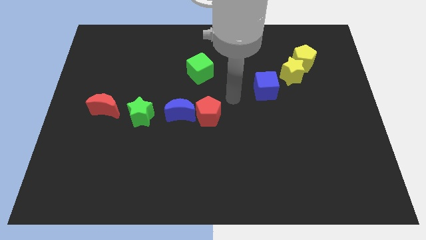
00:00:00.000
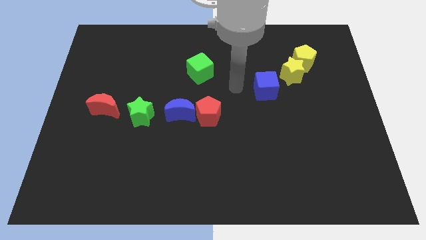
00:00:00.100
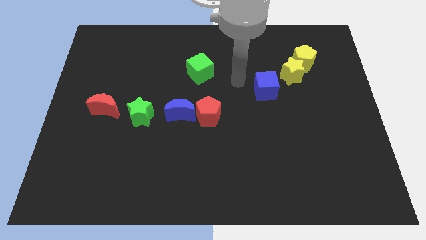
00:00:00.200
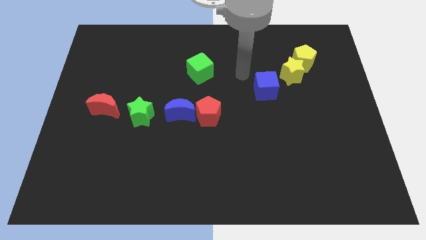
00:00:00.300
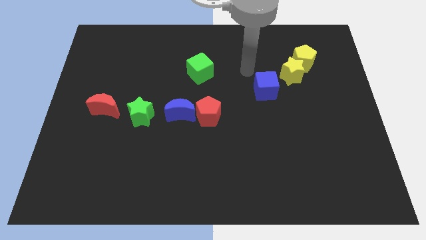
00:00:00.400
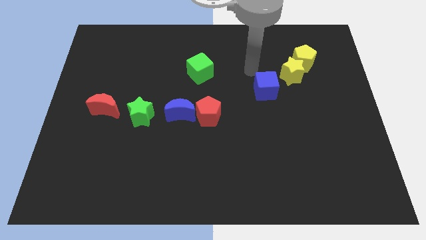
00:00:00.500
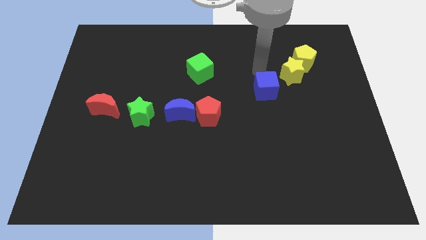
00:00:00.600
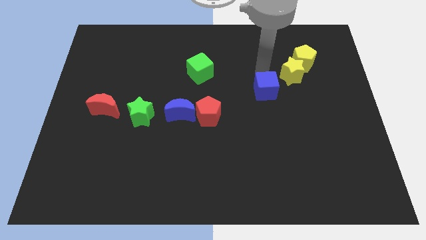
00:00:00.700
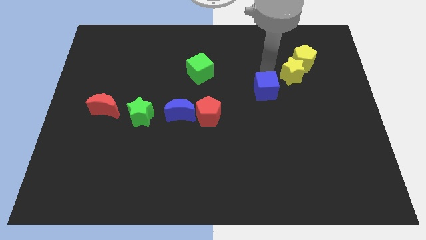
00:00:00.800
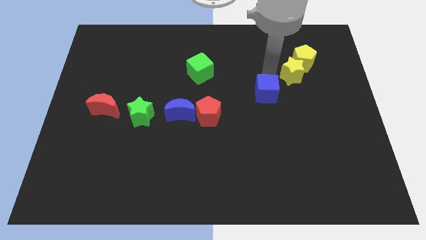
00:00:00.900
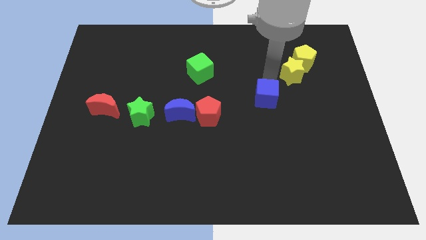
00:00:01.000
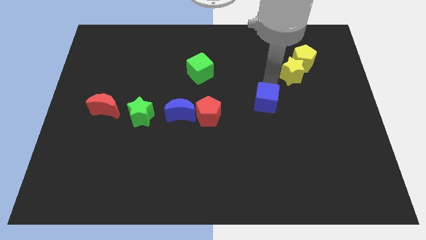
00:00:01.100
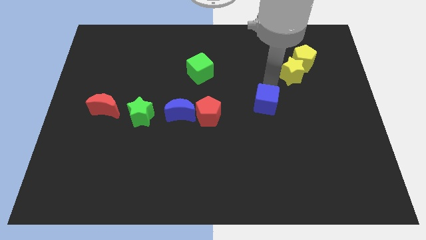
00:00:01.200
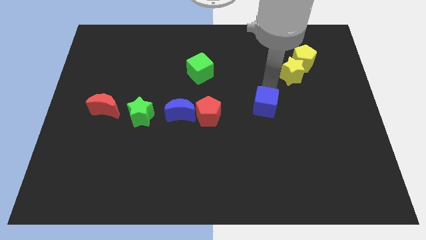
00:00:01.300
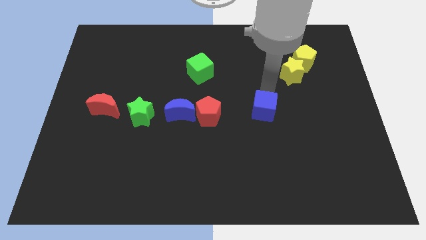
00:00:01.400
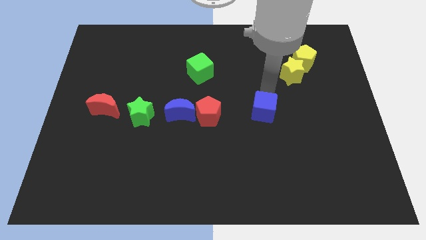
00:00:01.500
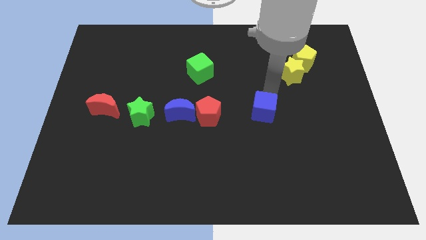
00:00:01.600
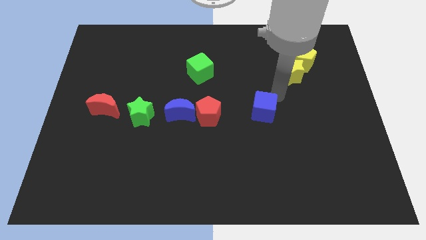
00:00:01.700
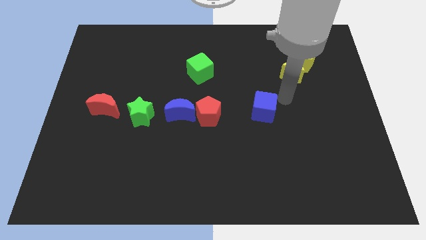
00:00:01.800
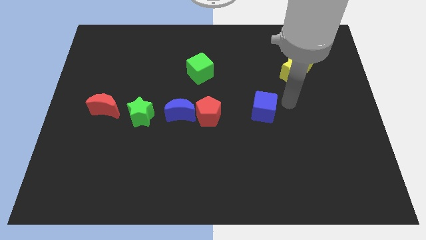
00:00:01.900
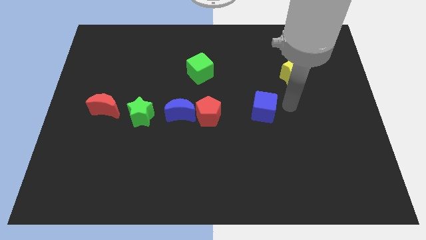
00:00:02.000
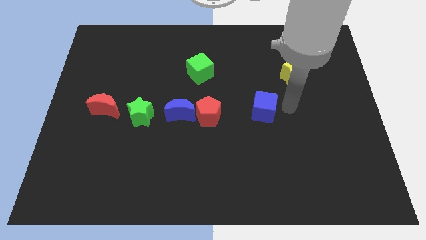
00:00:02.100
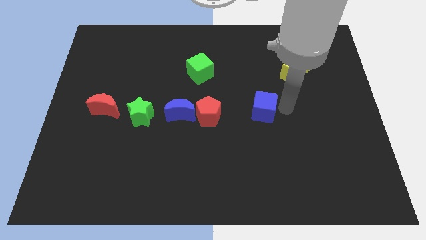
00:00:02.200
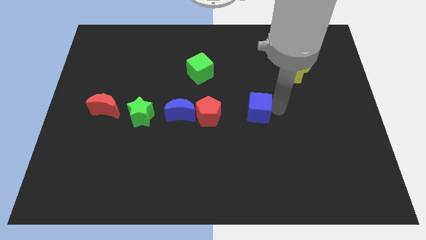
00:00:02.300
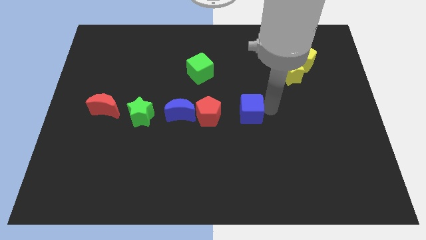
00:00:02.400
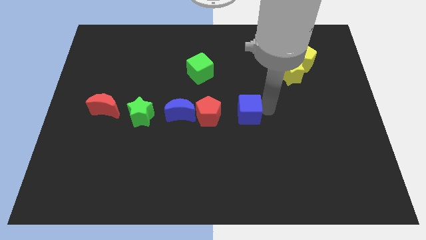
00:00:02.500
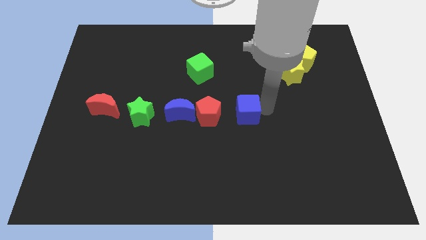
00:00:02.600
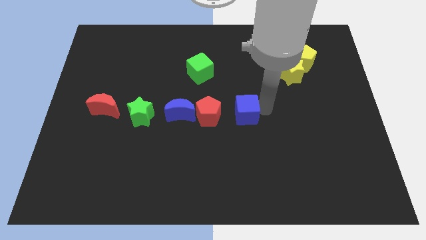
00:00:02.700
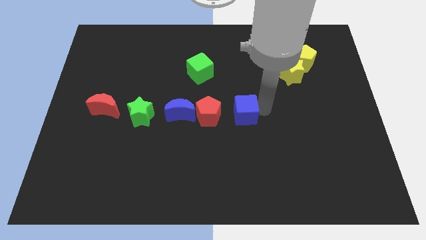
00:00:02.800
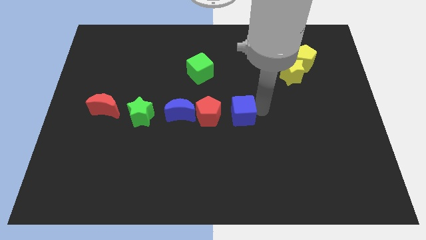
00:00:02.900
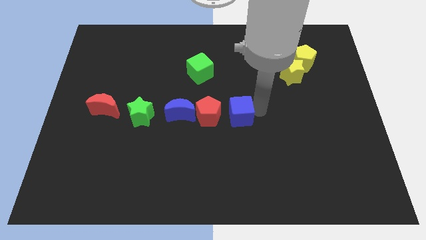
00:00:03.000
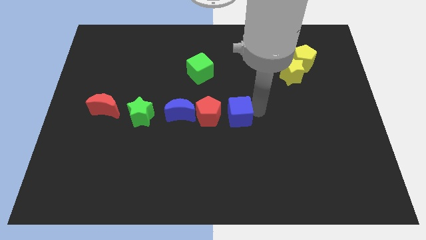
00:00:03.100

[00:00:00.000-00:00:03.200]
put the blue cube to the right side of the red pentagon

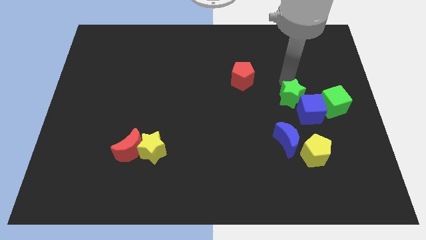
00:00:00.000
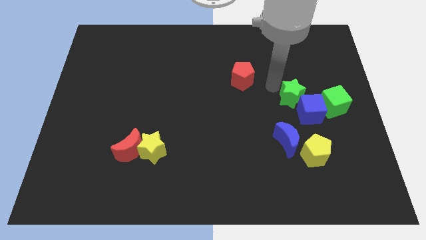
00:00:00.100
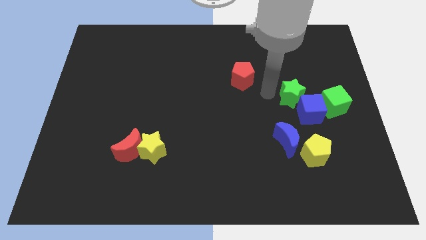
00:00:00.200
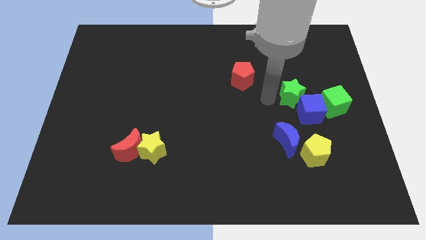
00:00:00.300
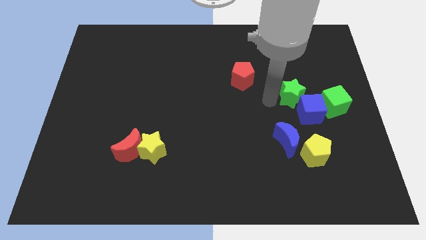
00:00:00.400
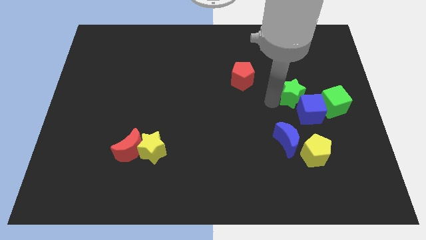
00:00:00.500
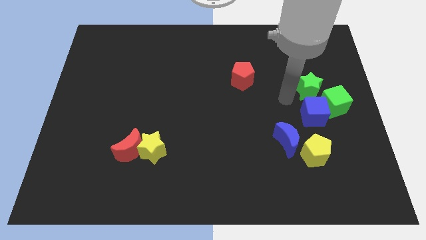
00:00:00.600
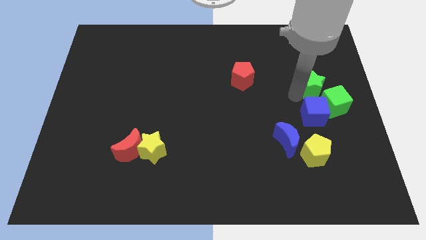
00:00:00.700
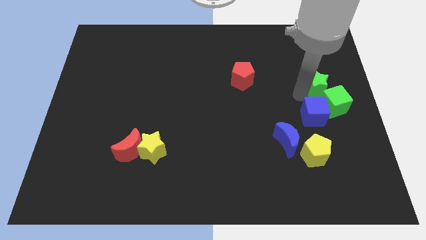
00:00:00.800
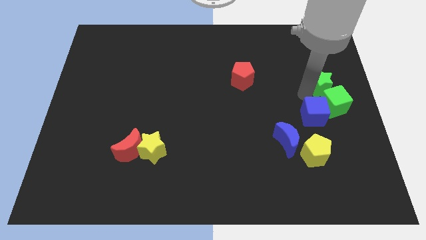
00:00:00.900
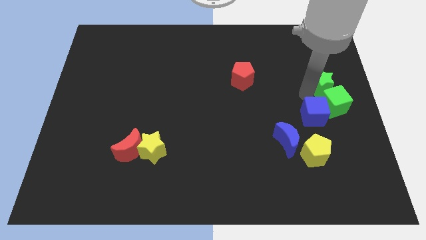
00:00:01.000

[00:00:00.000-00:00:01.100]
slide green star on top left of green cube

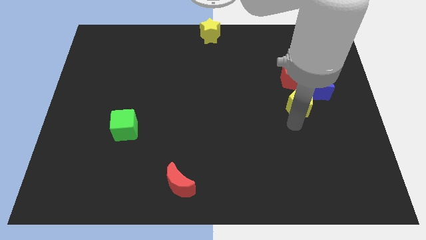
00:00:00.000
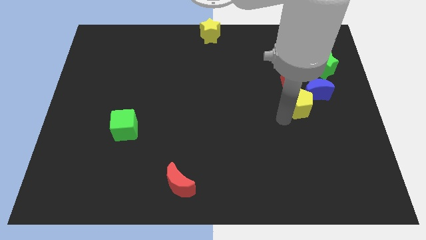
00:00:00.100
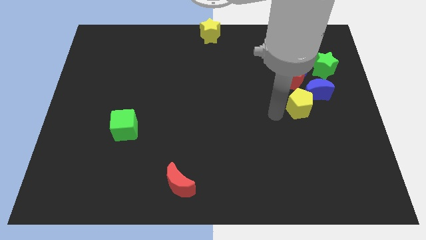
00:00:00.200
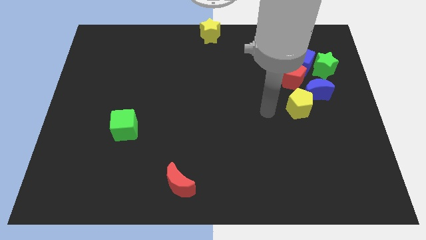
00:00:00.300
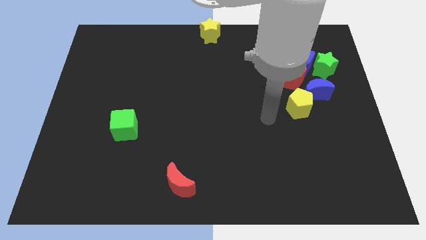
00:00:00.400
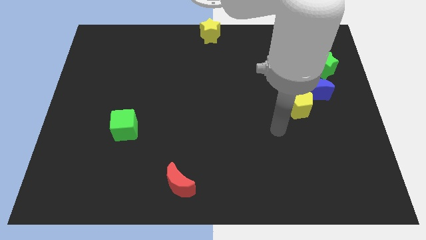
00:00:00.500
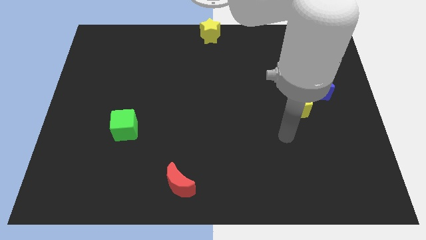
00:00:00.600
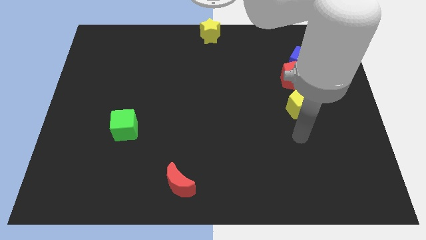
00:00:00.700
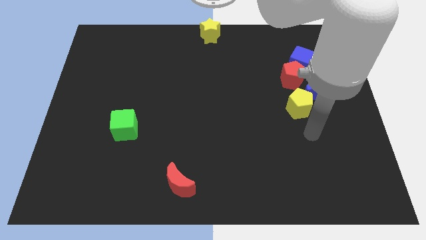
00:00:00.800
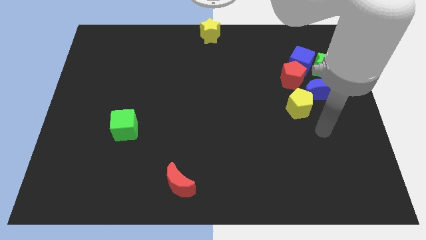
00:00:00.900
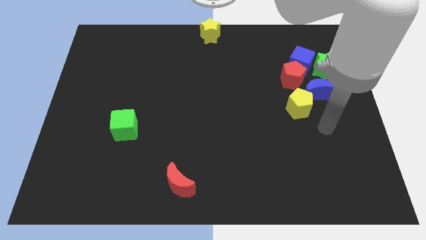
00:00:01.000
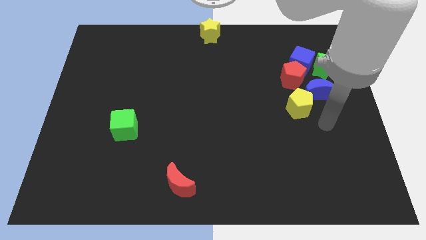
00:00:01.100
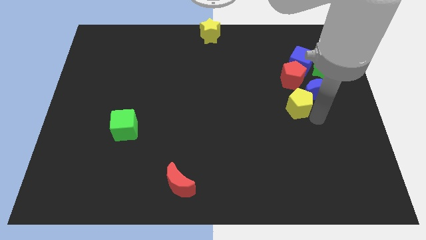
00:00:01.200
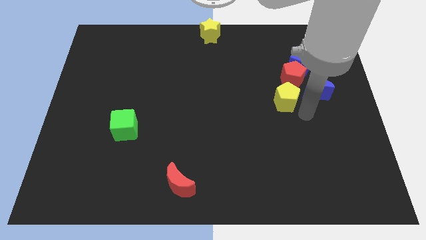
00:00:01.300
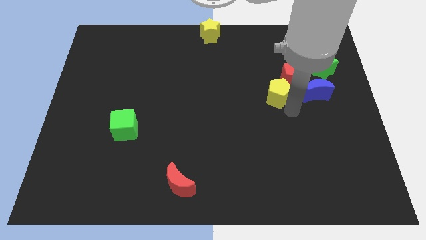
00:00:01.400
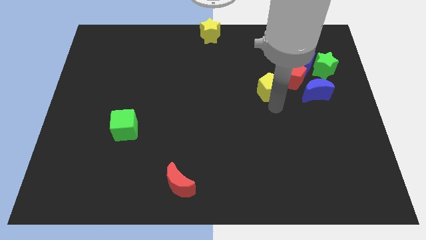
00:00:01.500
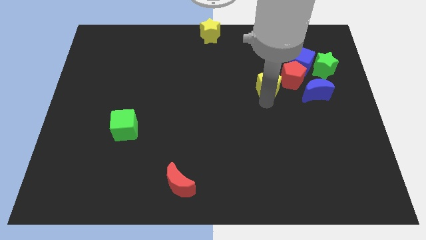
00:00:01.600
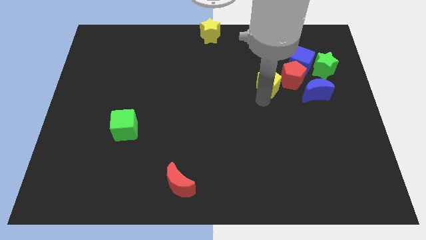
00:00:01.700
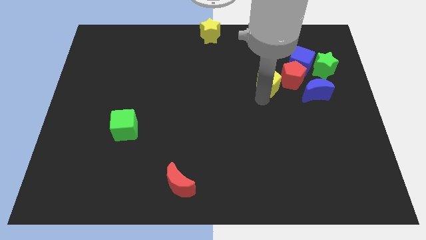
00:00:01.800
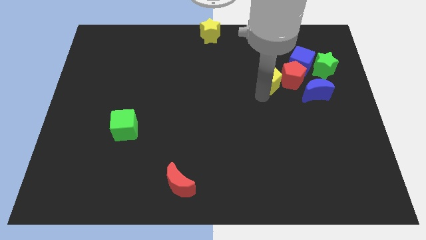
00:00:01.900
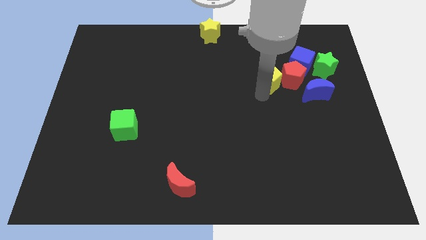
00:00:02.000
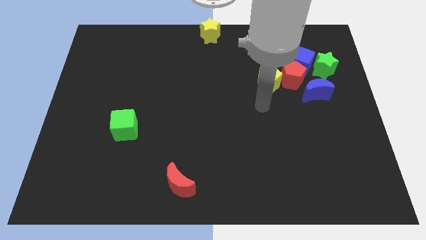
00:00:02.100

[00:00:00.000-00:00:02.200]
place the yellow pentagon at the bottom left side of red pentagon

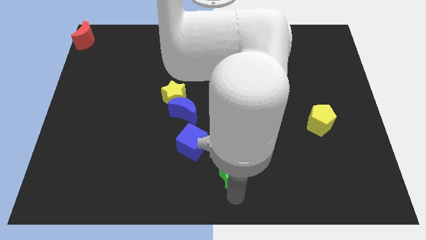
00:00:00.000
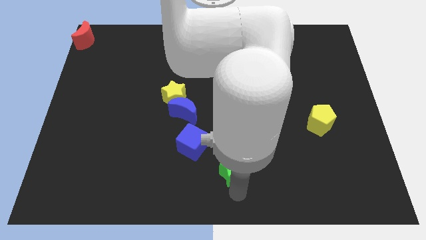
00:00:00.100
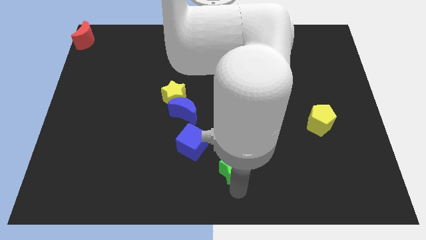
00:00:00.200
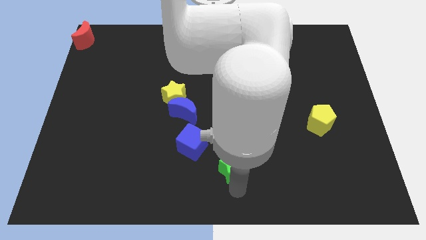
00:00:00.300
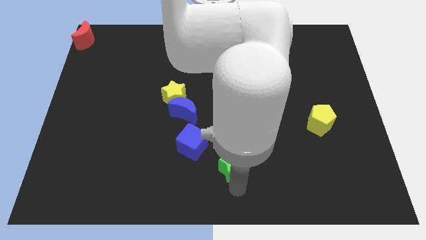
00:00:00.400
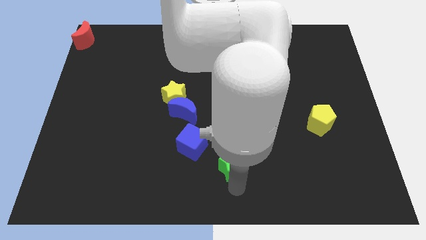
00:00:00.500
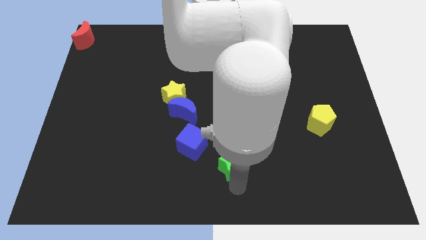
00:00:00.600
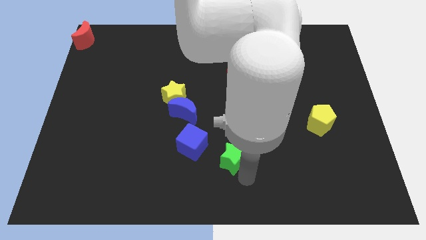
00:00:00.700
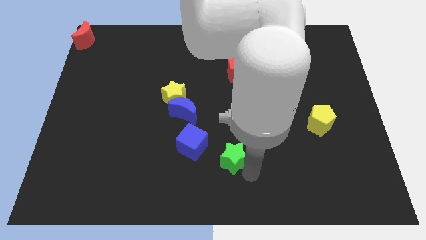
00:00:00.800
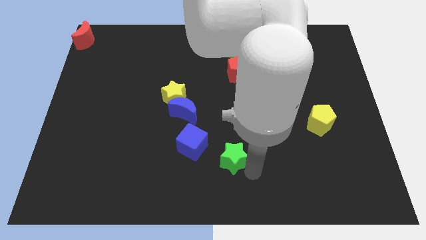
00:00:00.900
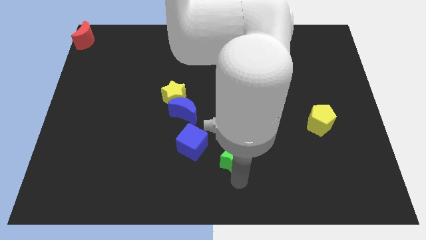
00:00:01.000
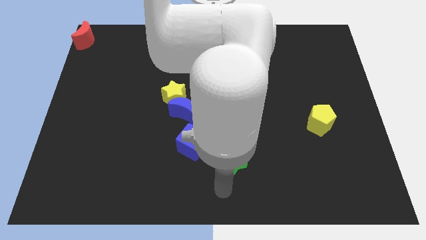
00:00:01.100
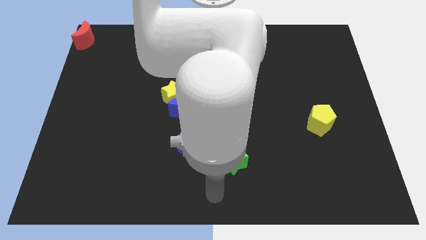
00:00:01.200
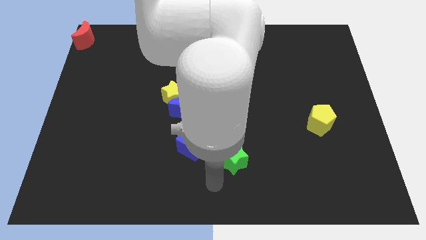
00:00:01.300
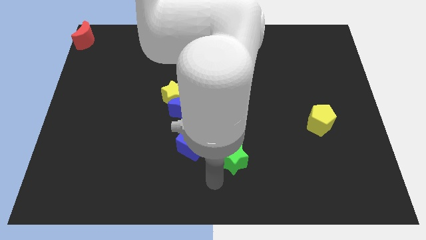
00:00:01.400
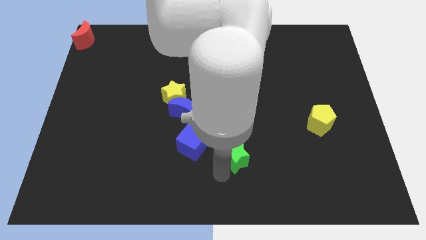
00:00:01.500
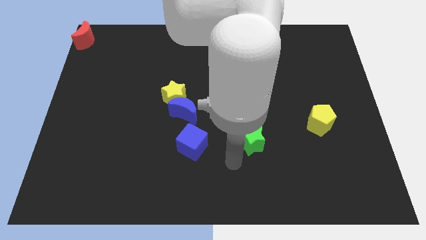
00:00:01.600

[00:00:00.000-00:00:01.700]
put the green cube to the right side of blue cube

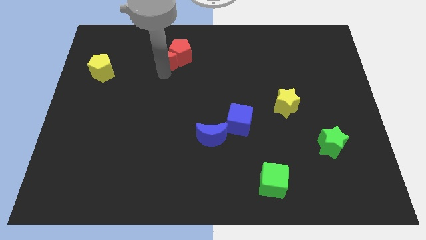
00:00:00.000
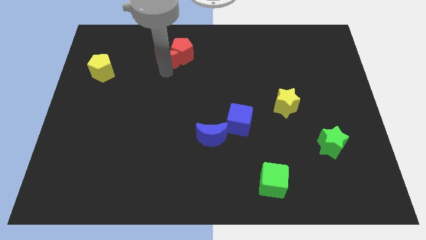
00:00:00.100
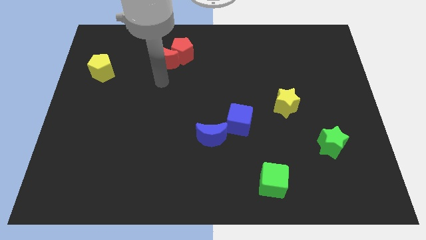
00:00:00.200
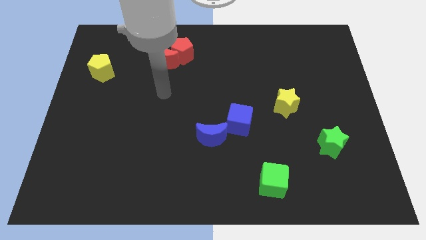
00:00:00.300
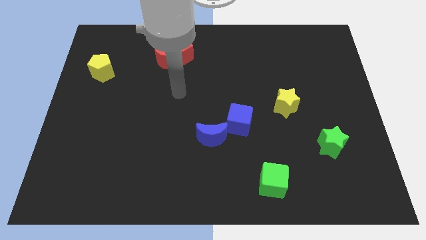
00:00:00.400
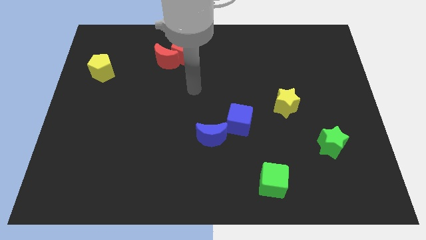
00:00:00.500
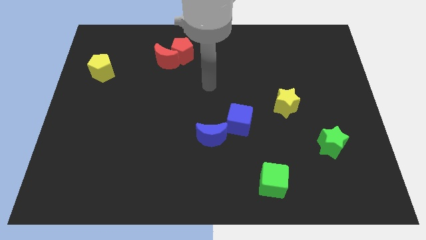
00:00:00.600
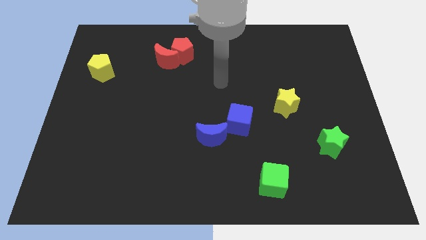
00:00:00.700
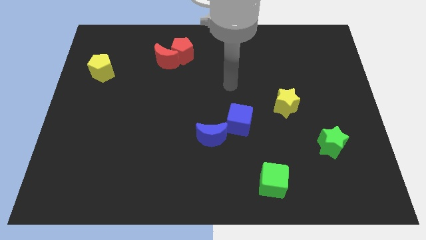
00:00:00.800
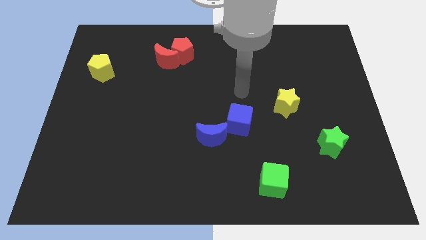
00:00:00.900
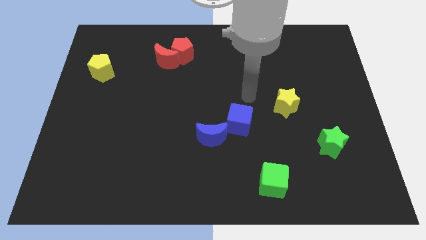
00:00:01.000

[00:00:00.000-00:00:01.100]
slide your arm away from red moon
